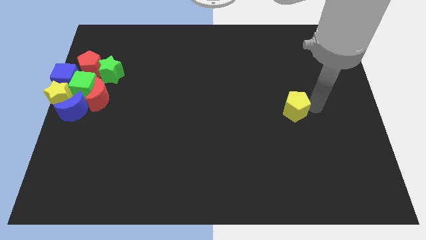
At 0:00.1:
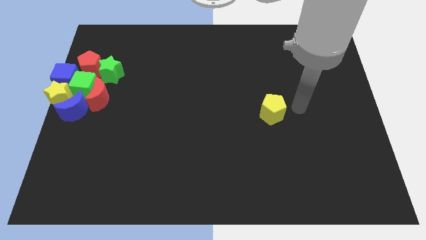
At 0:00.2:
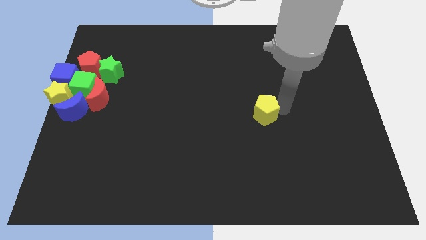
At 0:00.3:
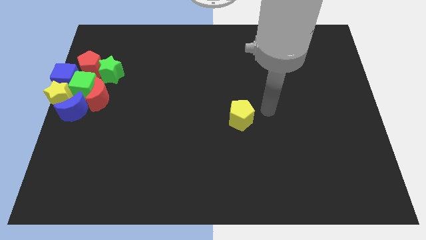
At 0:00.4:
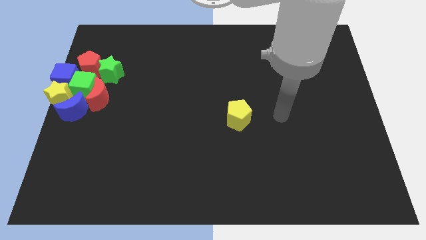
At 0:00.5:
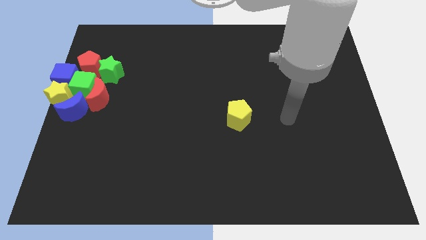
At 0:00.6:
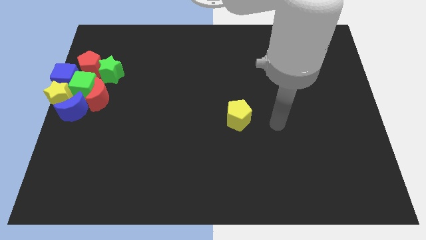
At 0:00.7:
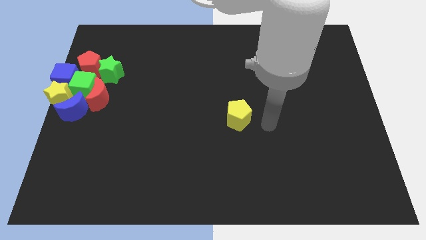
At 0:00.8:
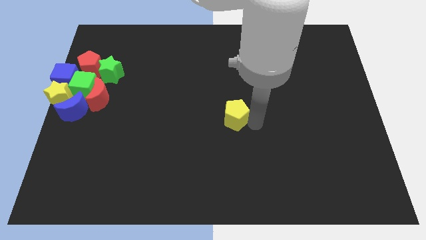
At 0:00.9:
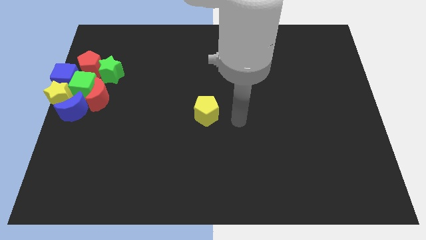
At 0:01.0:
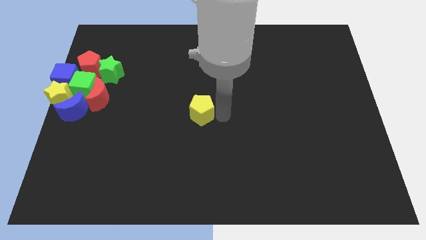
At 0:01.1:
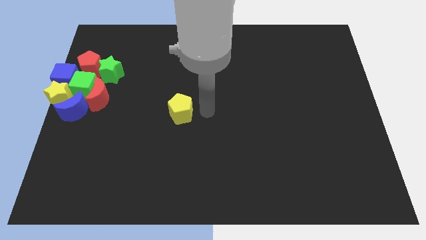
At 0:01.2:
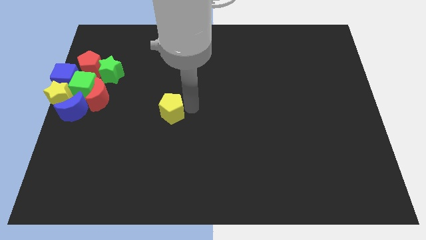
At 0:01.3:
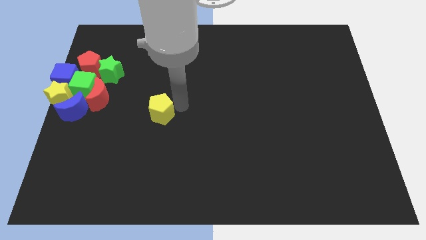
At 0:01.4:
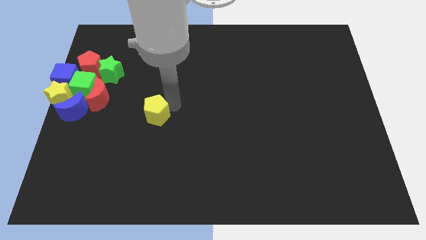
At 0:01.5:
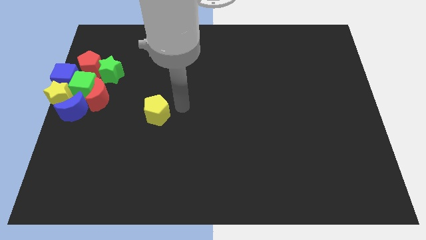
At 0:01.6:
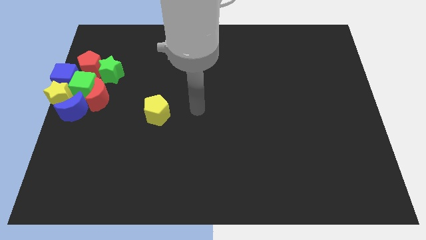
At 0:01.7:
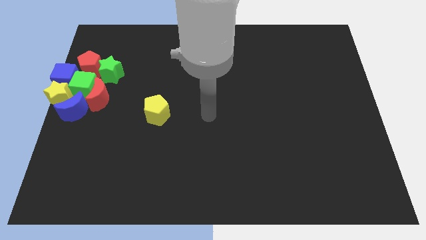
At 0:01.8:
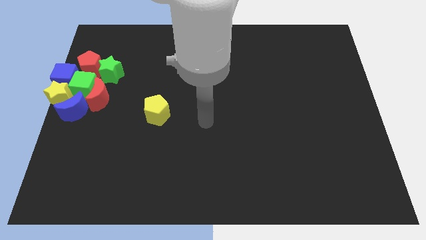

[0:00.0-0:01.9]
move the yellow pentagon towards the right of the group

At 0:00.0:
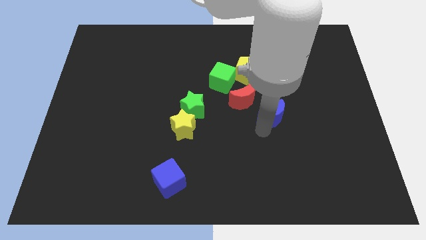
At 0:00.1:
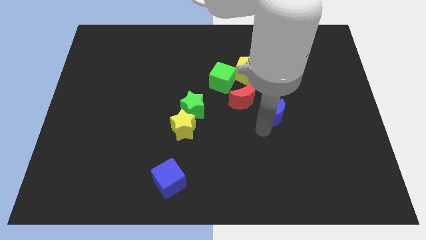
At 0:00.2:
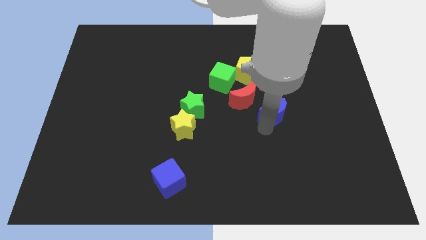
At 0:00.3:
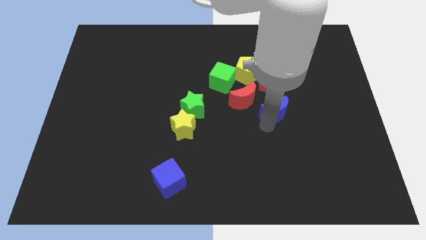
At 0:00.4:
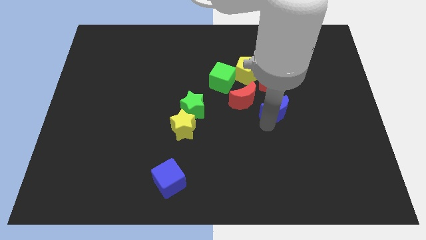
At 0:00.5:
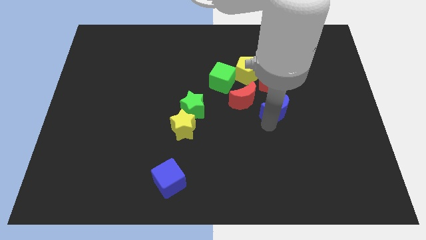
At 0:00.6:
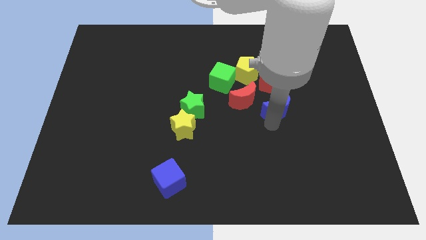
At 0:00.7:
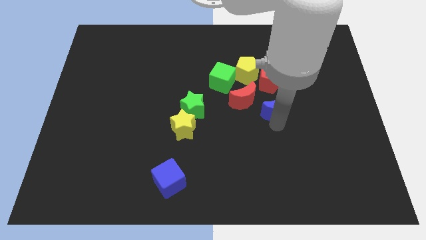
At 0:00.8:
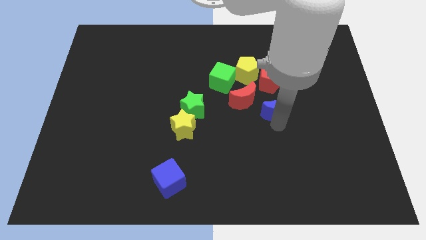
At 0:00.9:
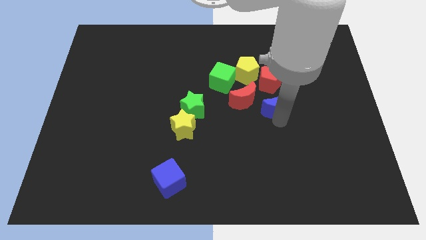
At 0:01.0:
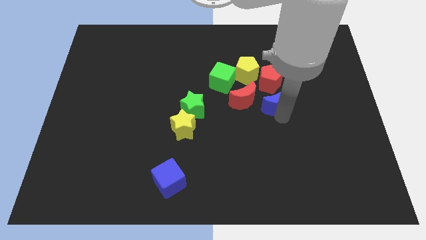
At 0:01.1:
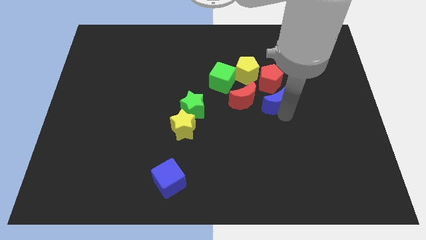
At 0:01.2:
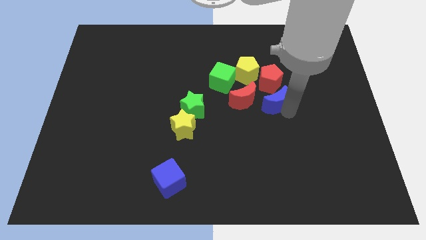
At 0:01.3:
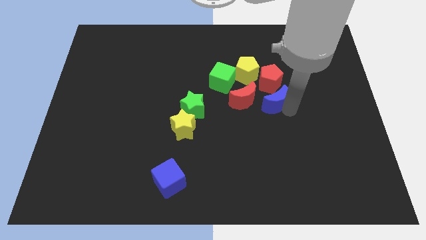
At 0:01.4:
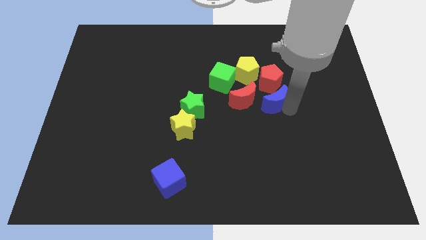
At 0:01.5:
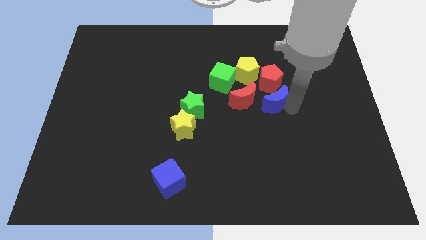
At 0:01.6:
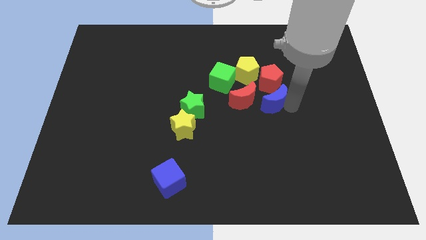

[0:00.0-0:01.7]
push the blue moon close to the red pentagon

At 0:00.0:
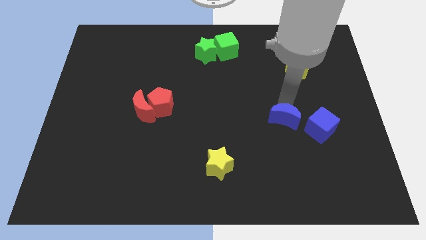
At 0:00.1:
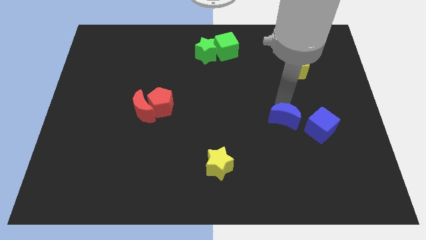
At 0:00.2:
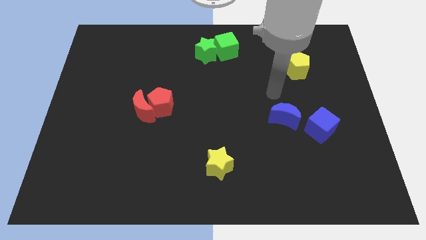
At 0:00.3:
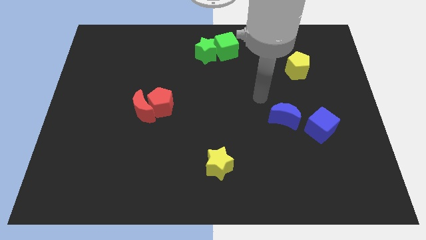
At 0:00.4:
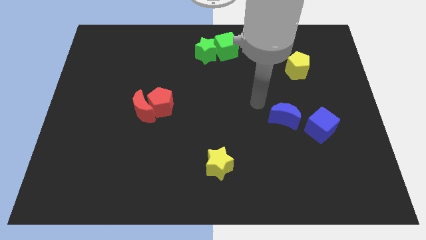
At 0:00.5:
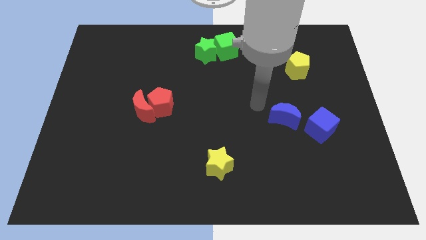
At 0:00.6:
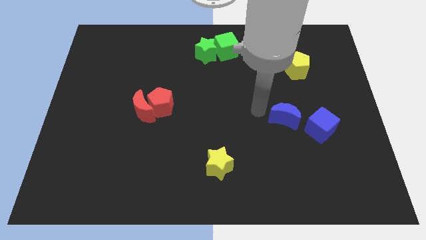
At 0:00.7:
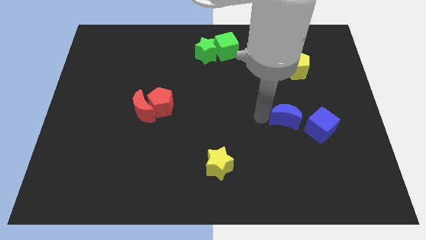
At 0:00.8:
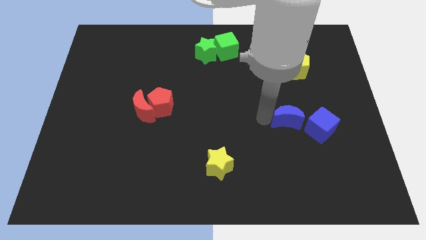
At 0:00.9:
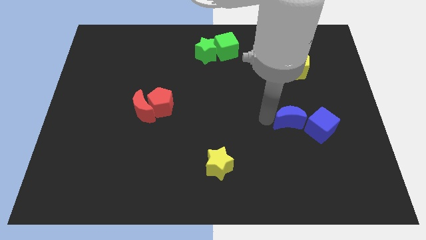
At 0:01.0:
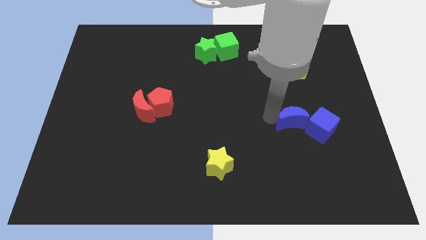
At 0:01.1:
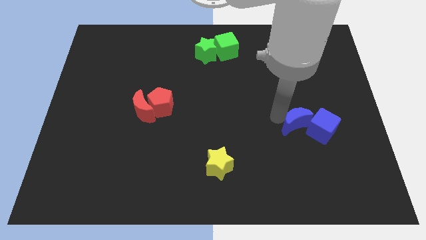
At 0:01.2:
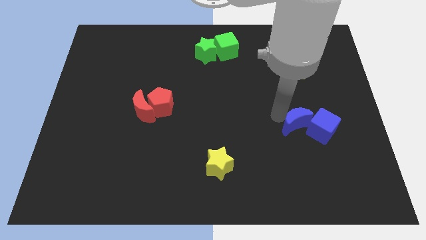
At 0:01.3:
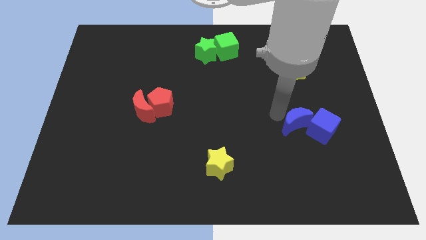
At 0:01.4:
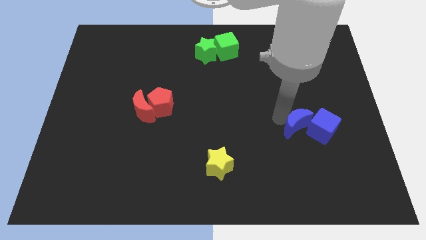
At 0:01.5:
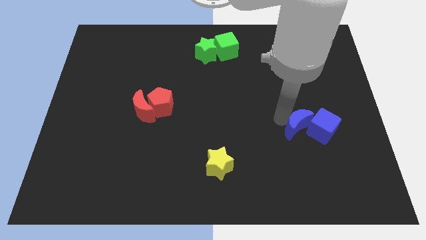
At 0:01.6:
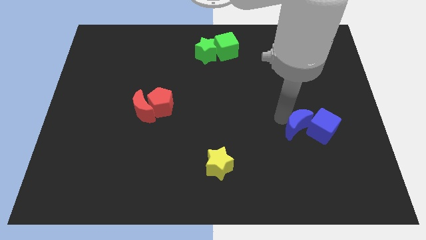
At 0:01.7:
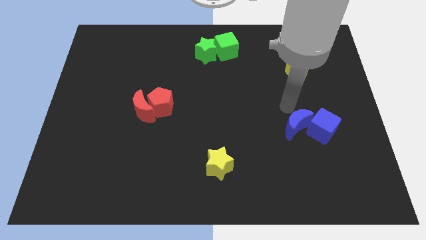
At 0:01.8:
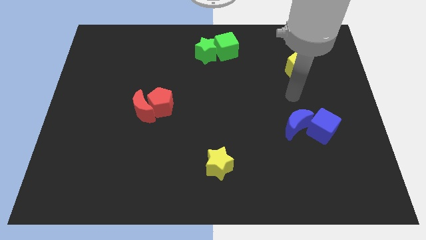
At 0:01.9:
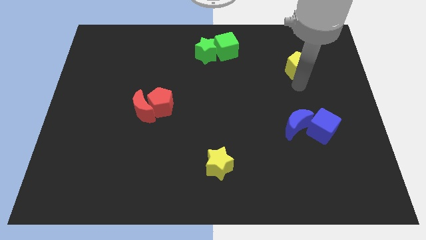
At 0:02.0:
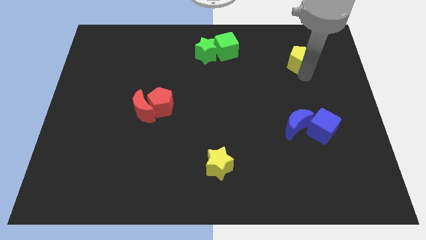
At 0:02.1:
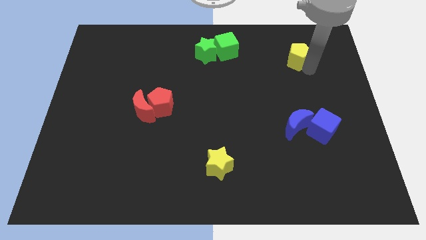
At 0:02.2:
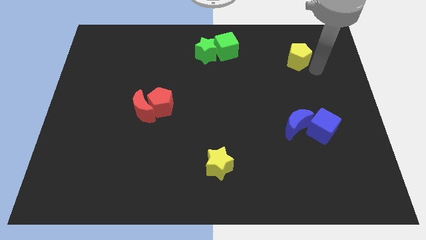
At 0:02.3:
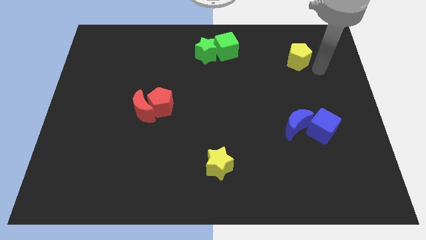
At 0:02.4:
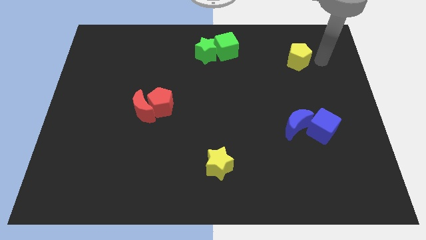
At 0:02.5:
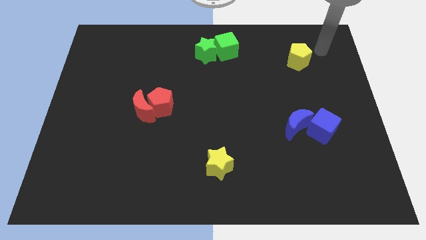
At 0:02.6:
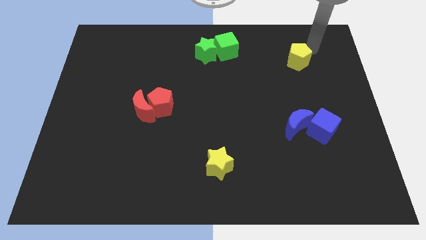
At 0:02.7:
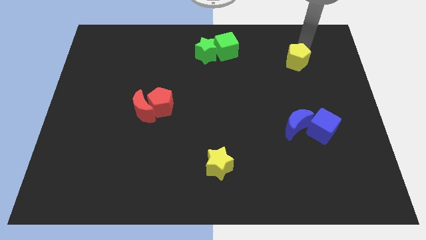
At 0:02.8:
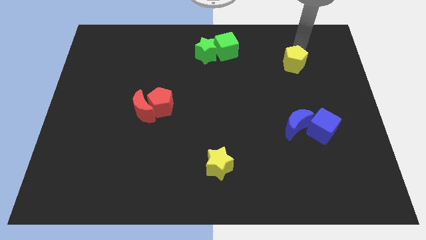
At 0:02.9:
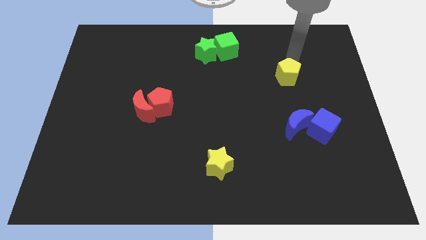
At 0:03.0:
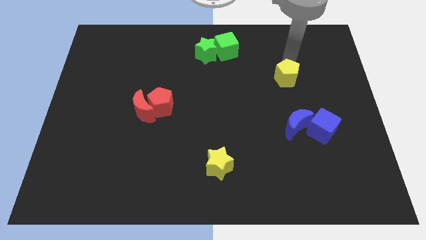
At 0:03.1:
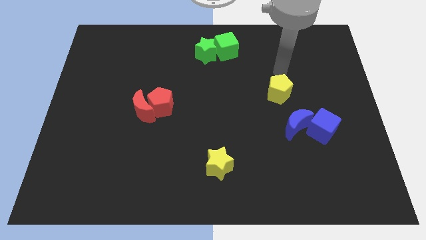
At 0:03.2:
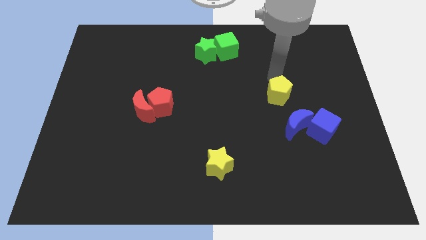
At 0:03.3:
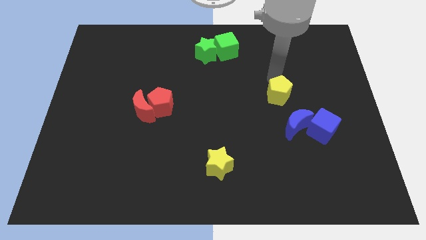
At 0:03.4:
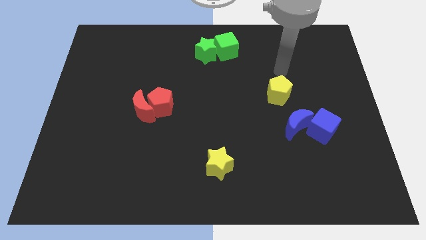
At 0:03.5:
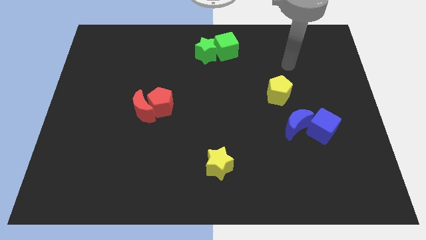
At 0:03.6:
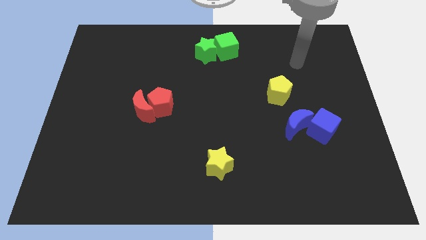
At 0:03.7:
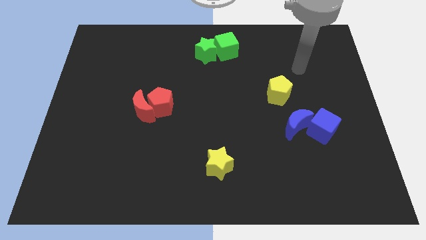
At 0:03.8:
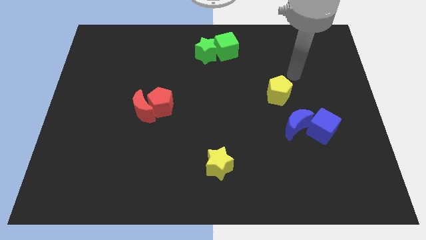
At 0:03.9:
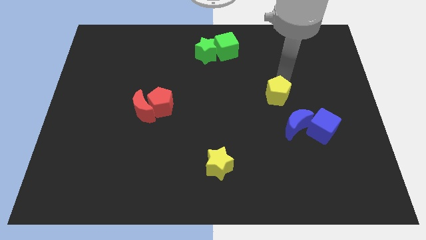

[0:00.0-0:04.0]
move the yellow pentagon diagonally to the blue moon

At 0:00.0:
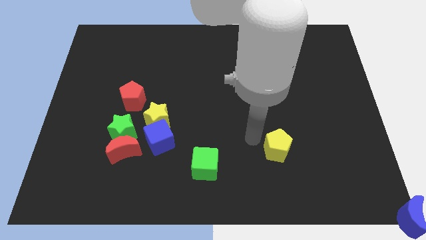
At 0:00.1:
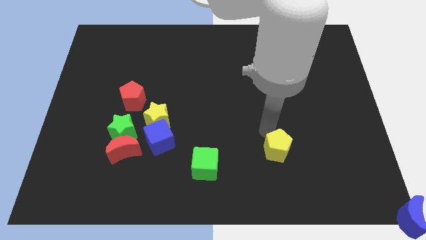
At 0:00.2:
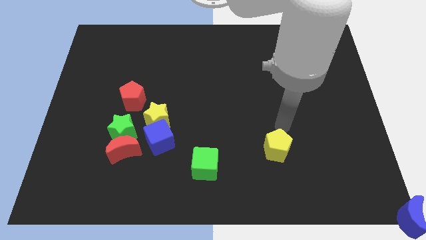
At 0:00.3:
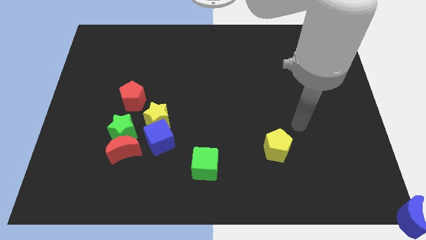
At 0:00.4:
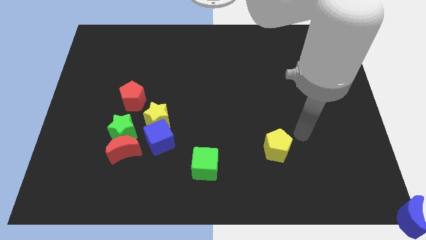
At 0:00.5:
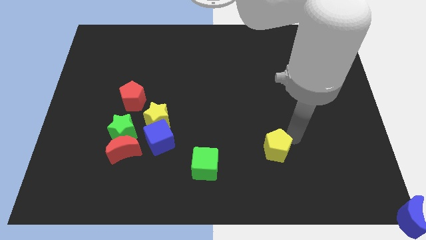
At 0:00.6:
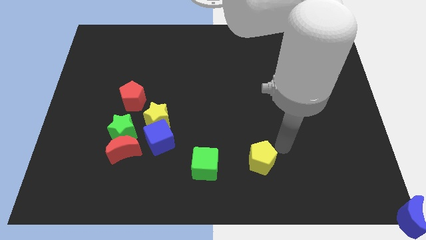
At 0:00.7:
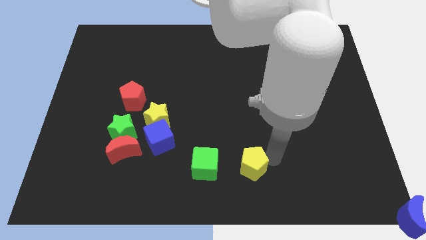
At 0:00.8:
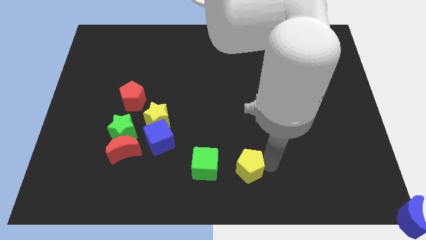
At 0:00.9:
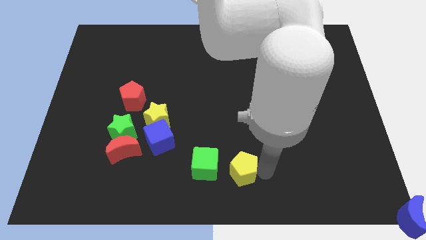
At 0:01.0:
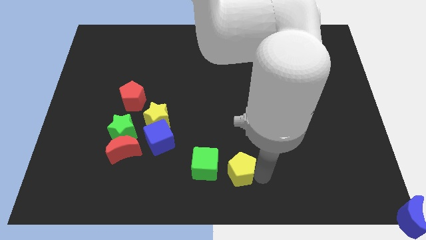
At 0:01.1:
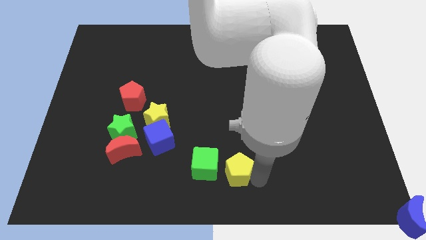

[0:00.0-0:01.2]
move the yellow pentagon to the right of the green cube

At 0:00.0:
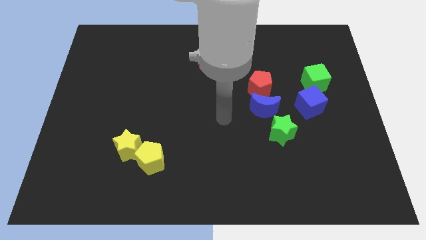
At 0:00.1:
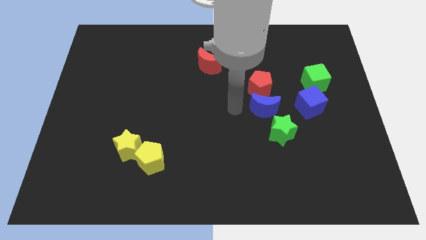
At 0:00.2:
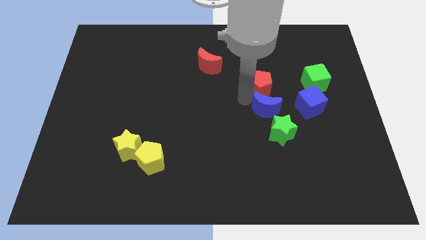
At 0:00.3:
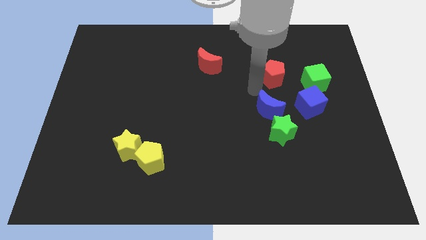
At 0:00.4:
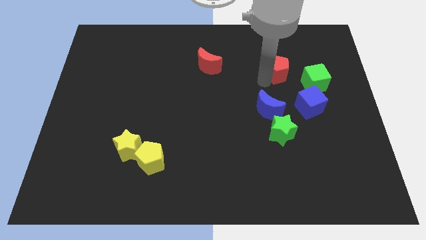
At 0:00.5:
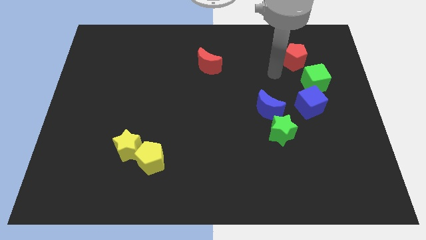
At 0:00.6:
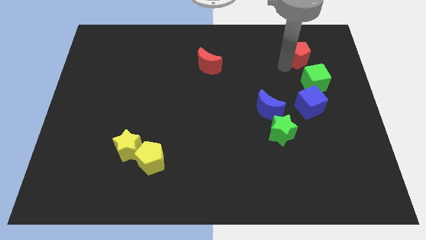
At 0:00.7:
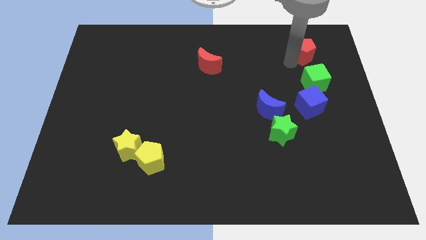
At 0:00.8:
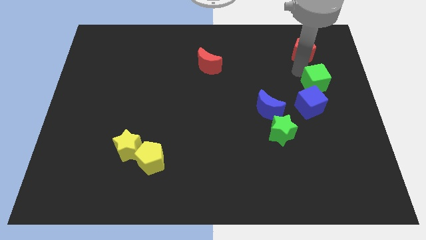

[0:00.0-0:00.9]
separate the red pentagon from the blue moon
